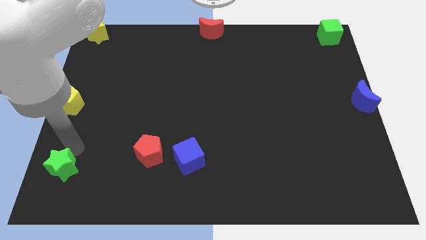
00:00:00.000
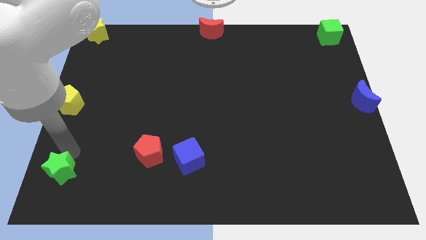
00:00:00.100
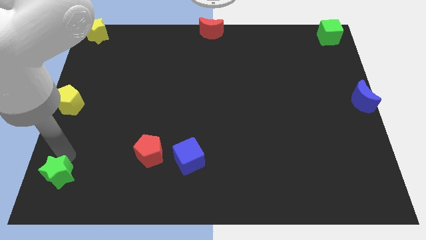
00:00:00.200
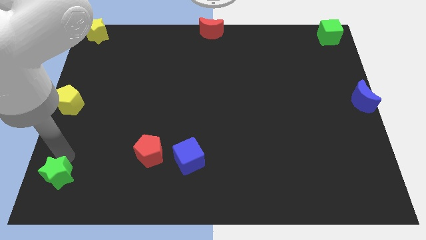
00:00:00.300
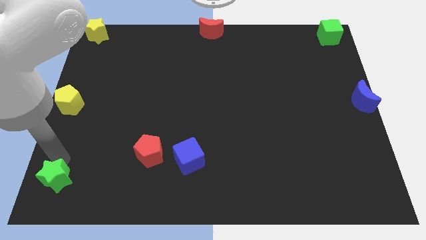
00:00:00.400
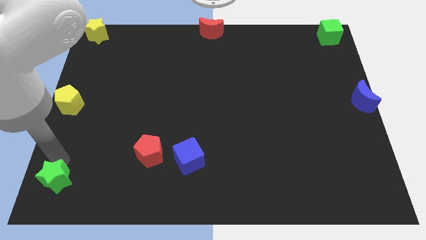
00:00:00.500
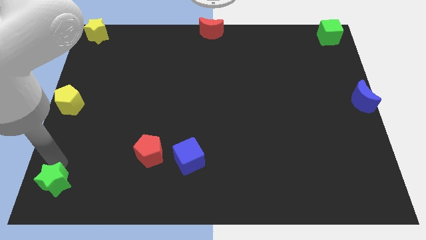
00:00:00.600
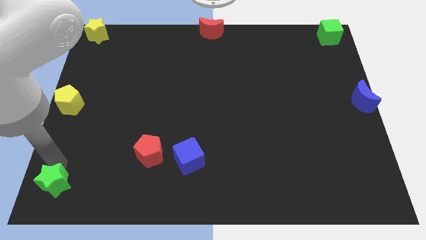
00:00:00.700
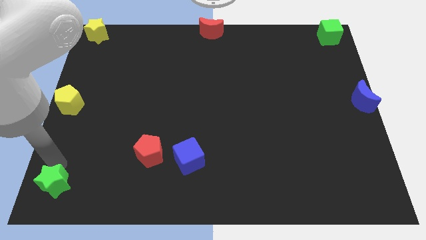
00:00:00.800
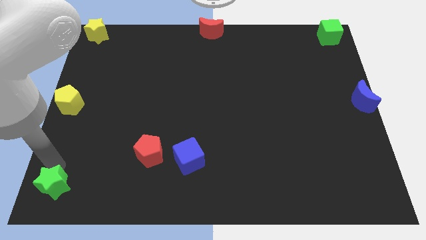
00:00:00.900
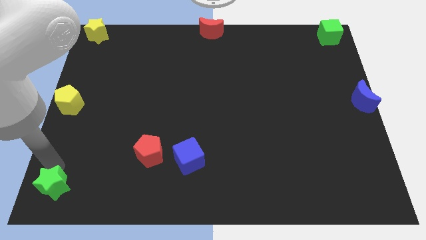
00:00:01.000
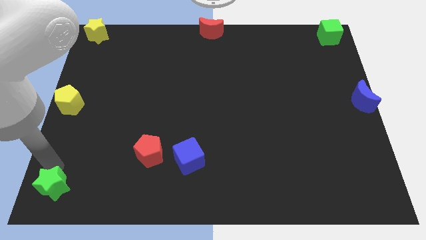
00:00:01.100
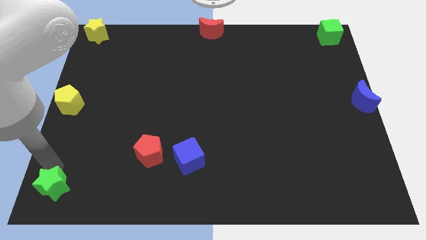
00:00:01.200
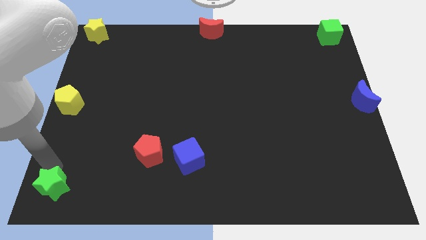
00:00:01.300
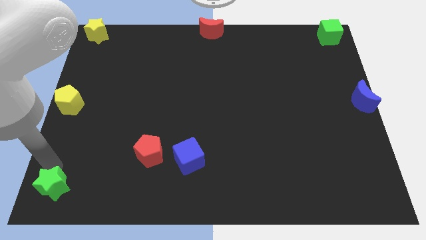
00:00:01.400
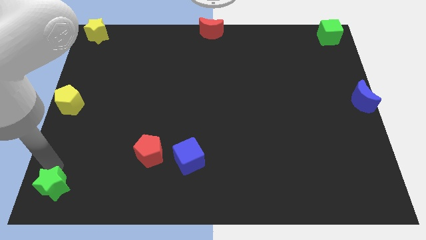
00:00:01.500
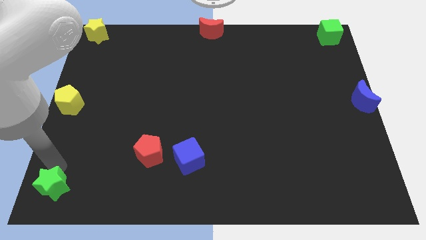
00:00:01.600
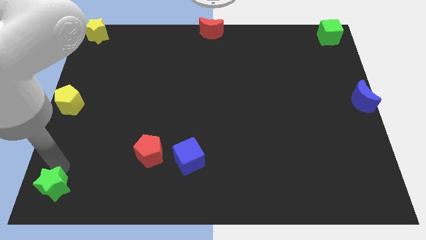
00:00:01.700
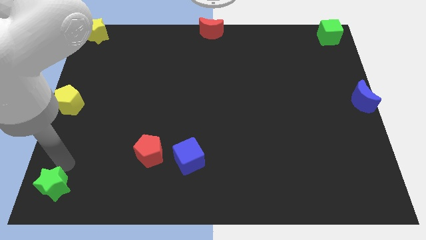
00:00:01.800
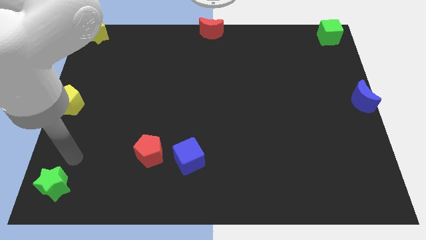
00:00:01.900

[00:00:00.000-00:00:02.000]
move the green star towards the bottom left side of the board

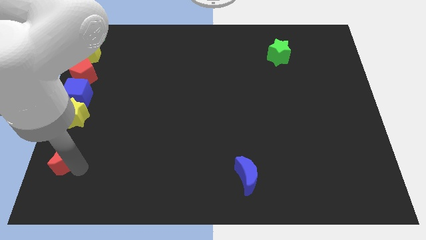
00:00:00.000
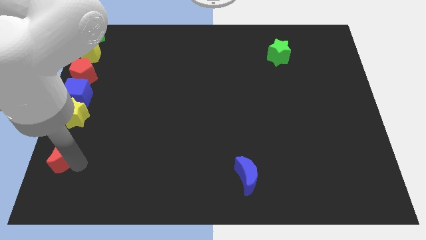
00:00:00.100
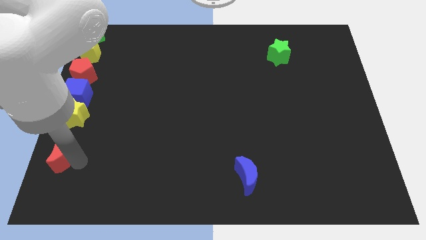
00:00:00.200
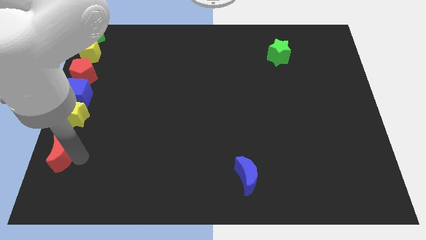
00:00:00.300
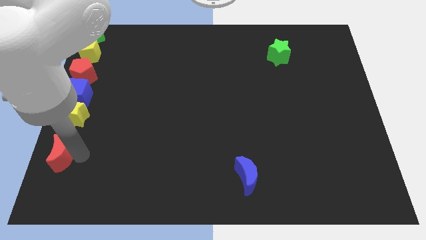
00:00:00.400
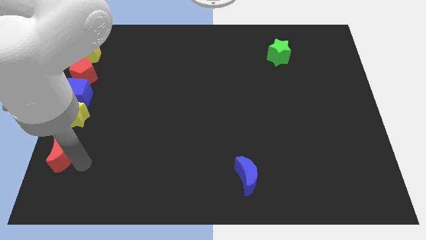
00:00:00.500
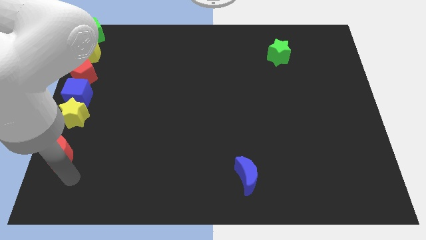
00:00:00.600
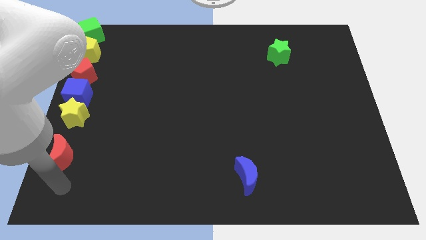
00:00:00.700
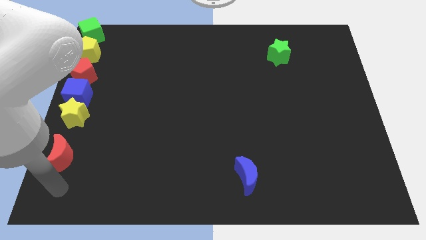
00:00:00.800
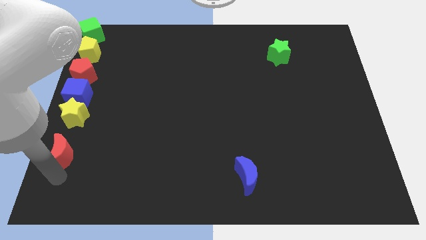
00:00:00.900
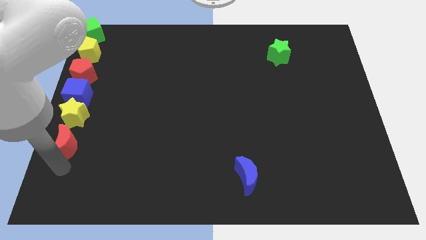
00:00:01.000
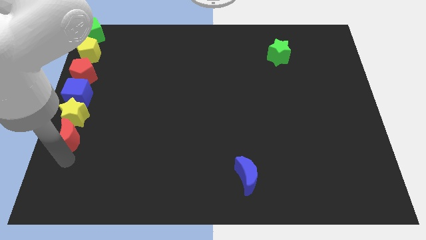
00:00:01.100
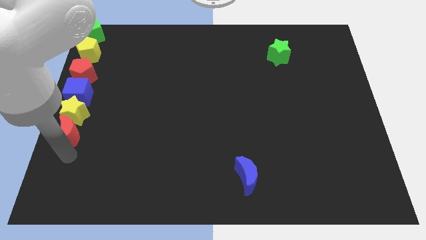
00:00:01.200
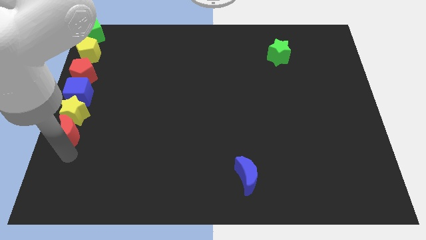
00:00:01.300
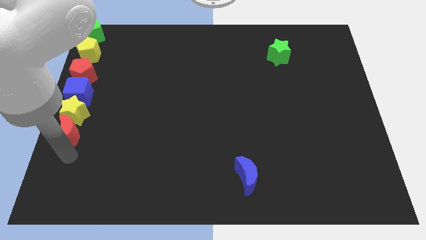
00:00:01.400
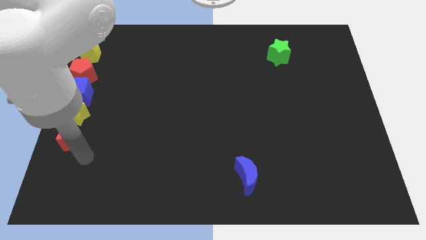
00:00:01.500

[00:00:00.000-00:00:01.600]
push the red moon into the yellow star

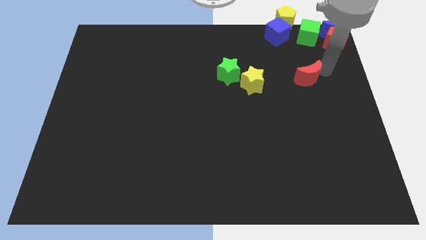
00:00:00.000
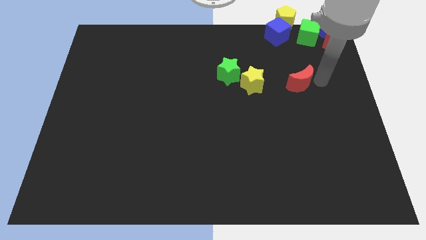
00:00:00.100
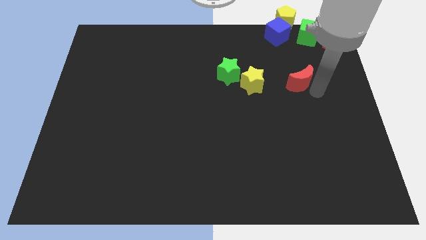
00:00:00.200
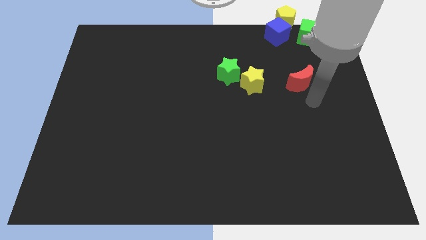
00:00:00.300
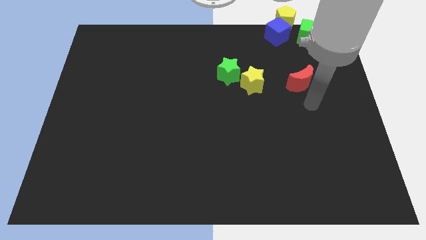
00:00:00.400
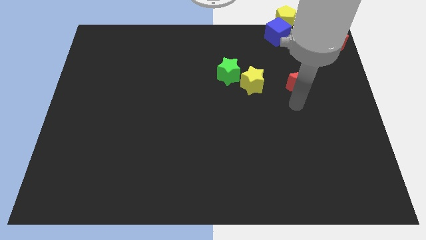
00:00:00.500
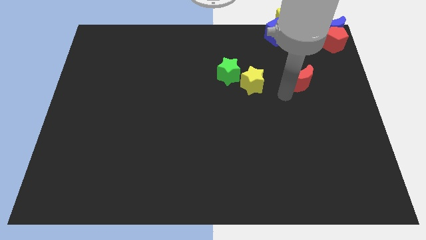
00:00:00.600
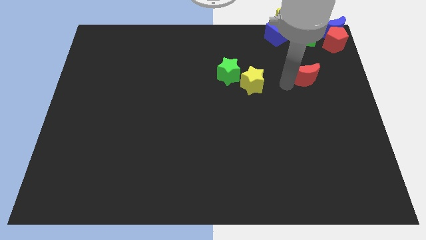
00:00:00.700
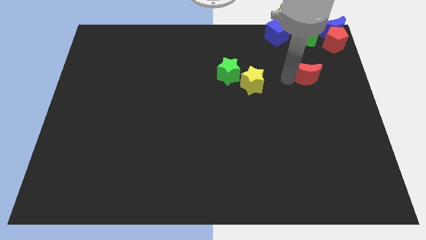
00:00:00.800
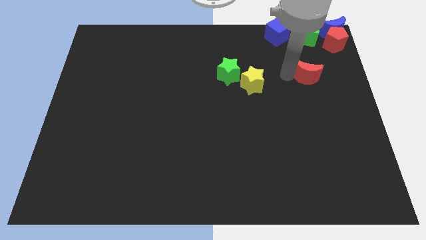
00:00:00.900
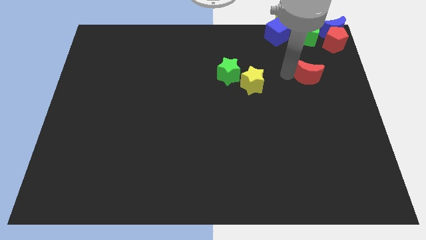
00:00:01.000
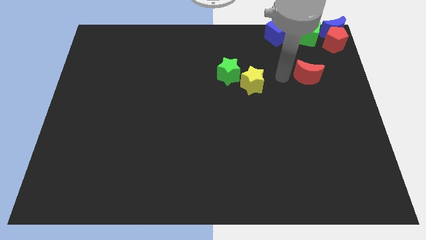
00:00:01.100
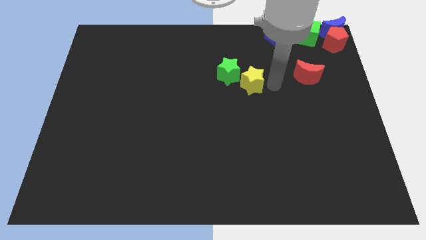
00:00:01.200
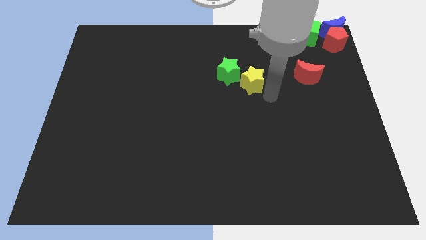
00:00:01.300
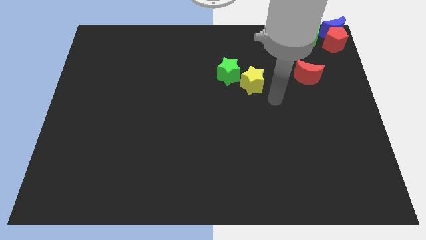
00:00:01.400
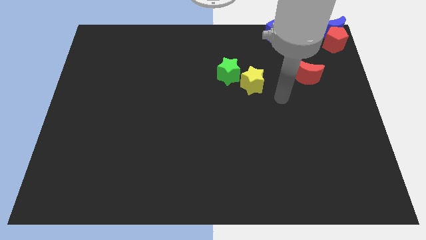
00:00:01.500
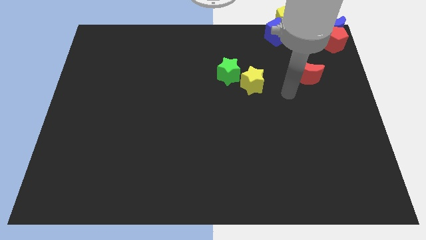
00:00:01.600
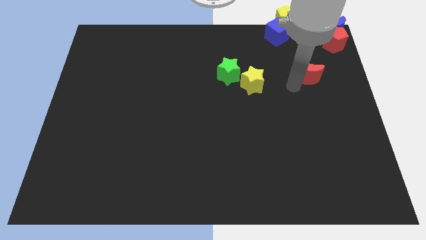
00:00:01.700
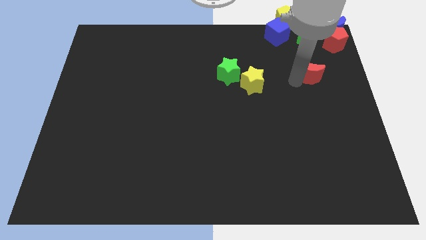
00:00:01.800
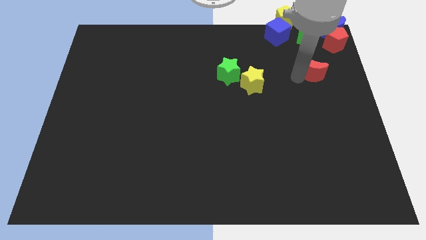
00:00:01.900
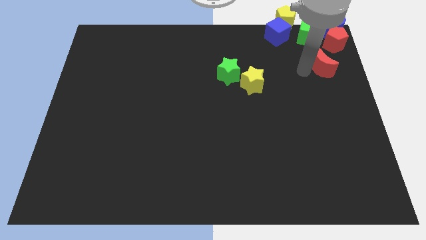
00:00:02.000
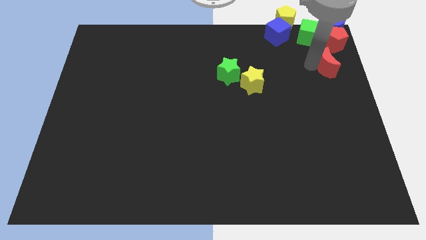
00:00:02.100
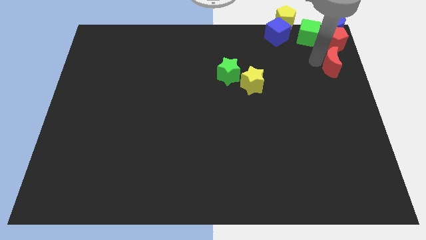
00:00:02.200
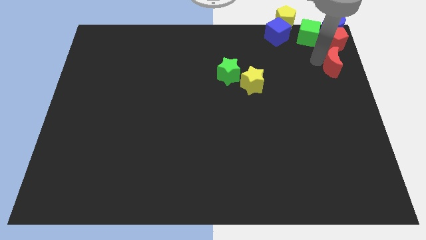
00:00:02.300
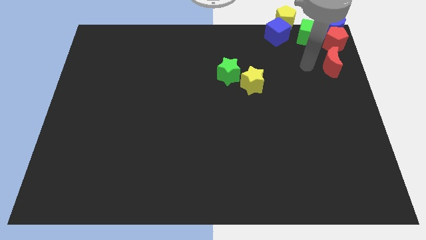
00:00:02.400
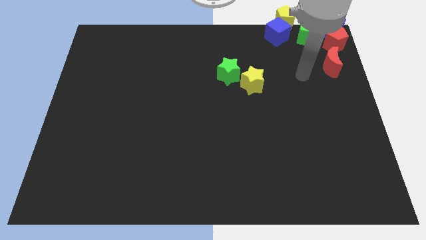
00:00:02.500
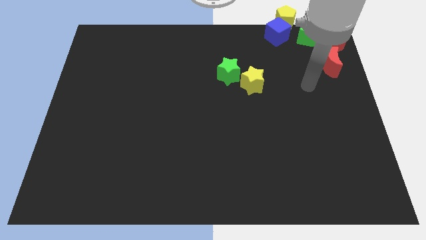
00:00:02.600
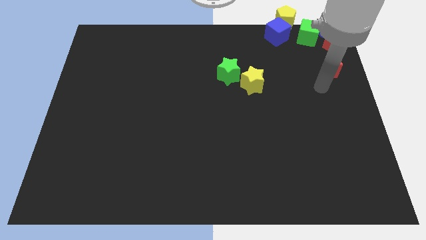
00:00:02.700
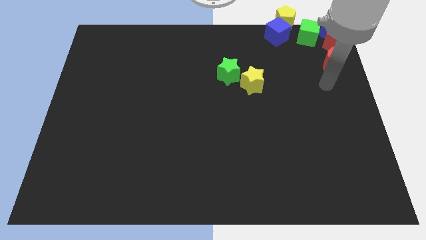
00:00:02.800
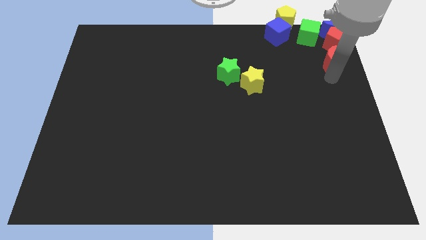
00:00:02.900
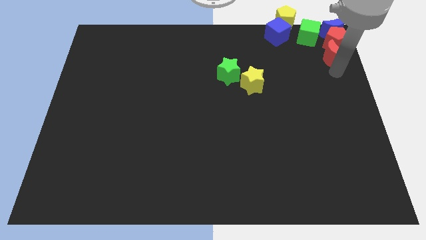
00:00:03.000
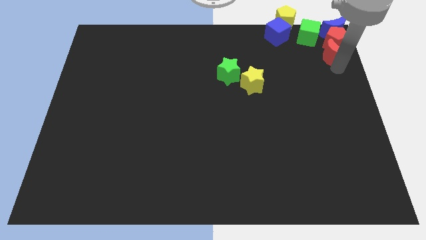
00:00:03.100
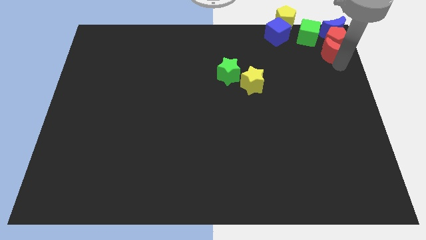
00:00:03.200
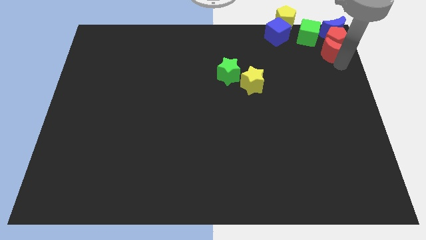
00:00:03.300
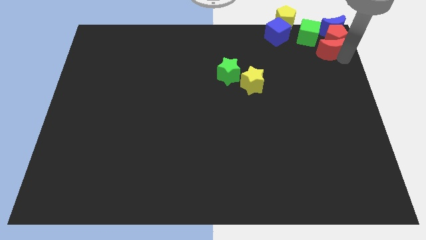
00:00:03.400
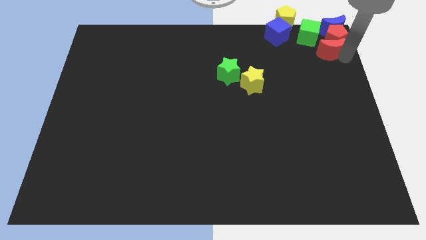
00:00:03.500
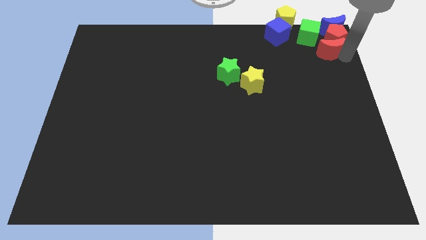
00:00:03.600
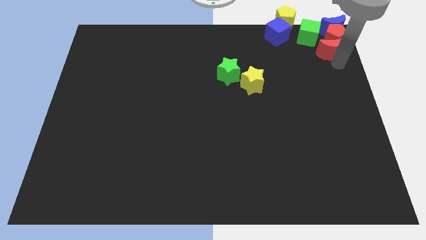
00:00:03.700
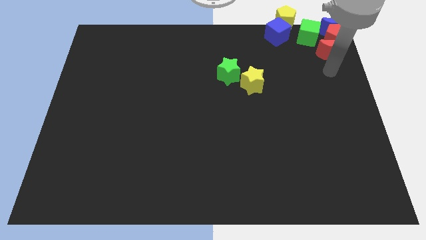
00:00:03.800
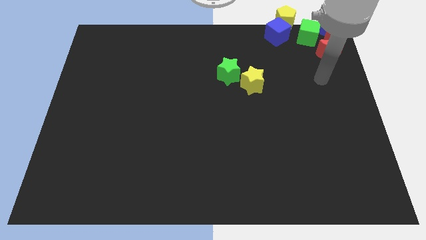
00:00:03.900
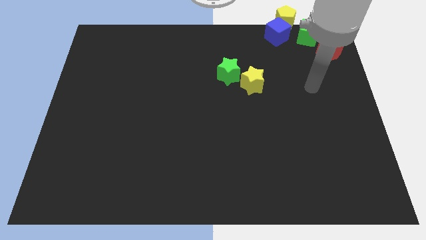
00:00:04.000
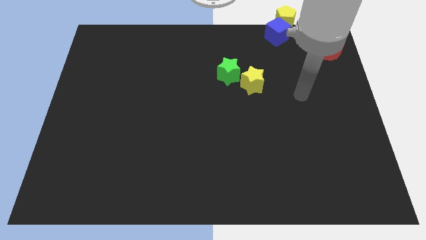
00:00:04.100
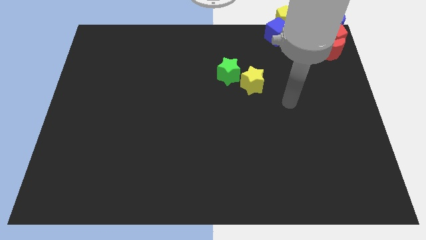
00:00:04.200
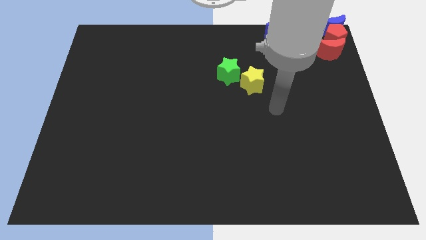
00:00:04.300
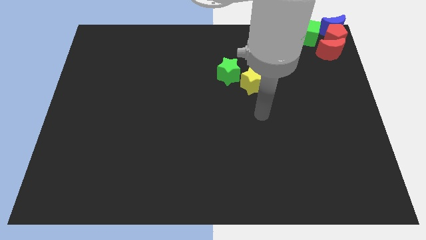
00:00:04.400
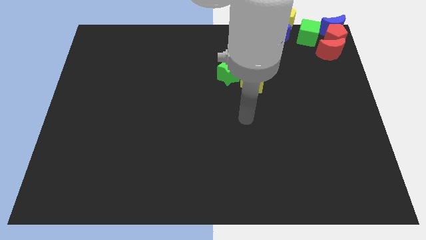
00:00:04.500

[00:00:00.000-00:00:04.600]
push the red moon into the red pentagon

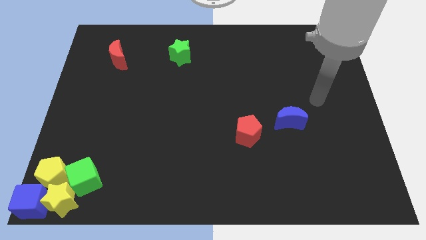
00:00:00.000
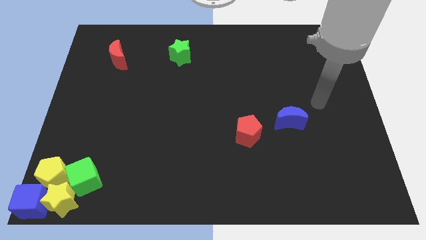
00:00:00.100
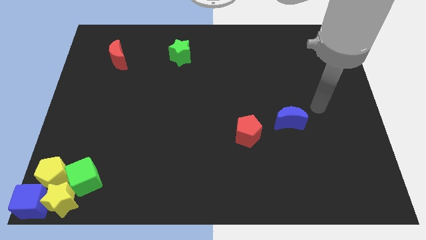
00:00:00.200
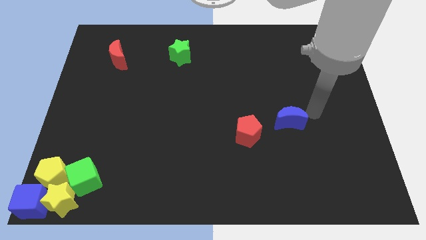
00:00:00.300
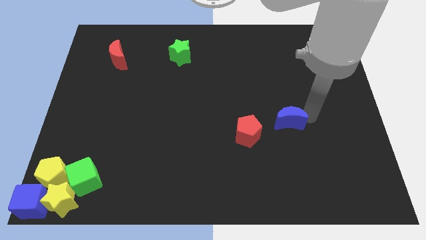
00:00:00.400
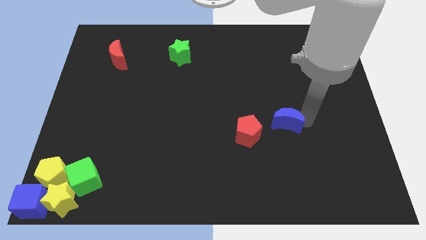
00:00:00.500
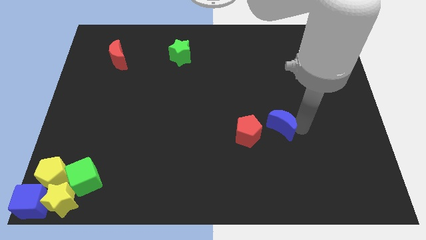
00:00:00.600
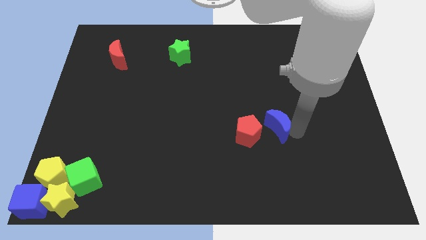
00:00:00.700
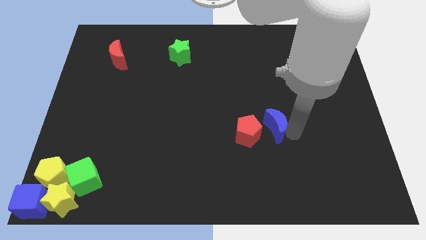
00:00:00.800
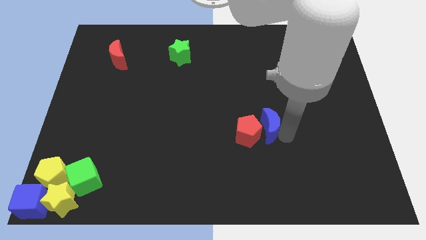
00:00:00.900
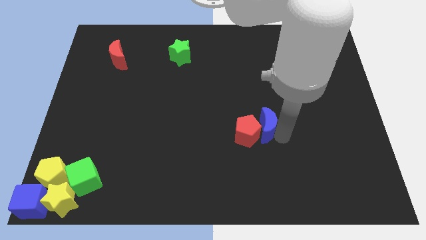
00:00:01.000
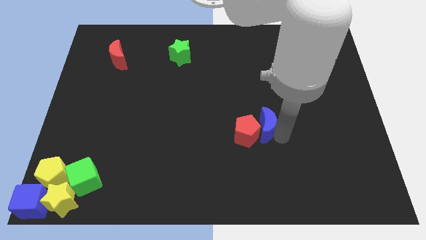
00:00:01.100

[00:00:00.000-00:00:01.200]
place the blue crescent to the right side of red pentagon
